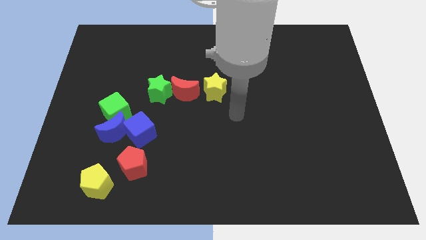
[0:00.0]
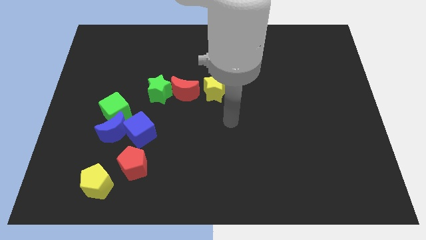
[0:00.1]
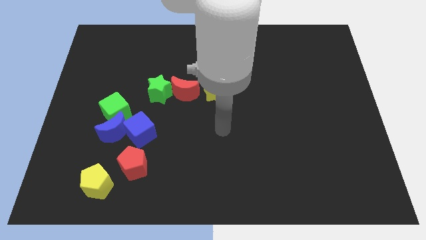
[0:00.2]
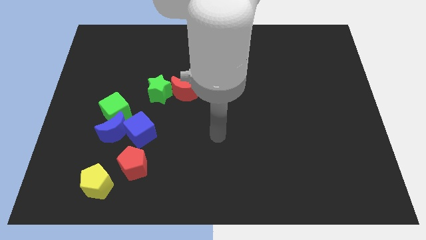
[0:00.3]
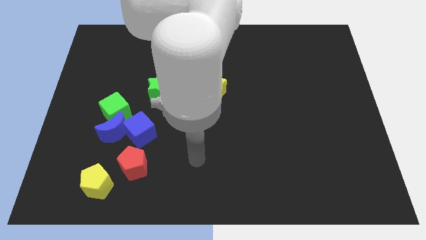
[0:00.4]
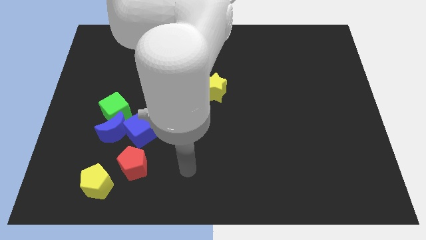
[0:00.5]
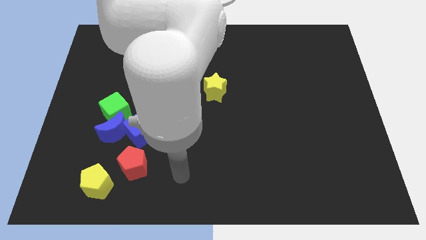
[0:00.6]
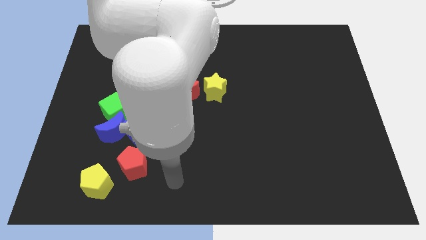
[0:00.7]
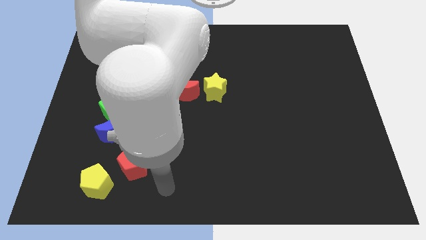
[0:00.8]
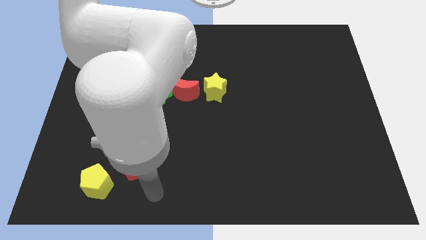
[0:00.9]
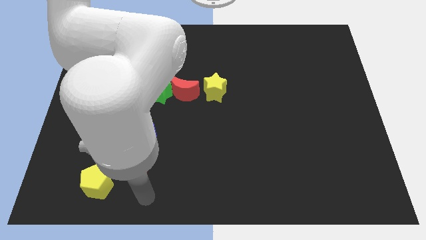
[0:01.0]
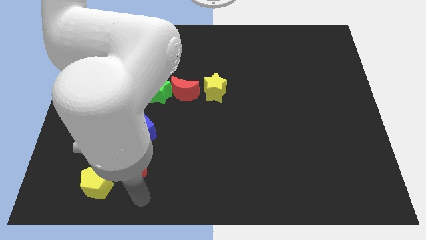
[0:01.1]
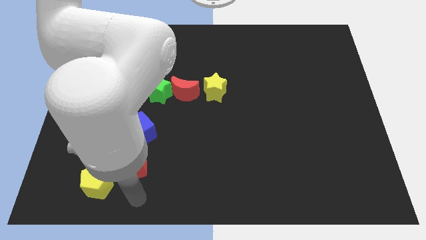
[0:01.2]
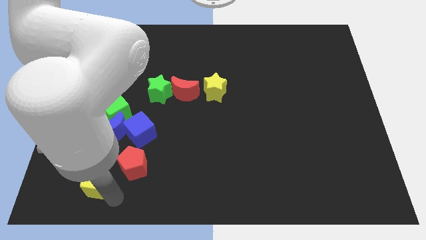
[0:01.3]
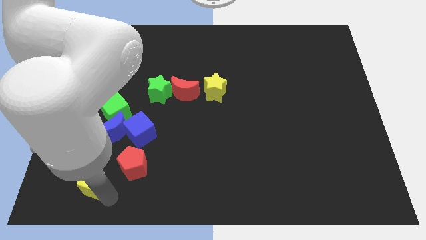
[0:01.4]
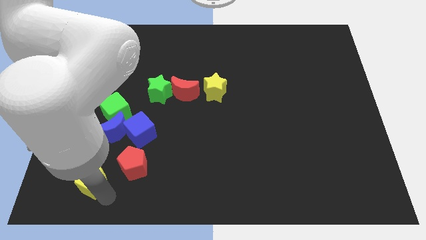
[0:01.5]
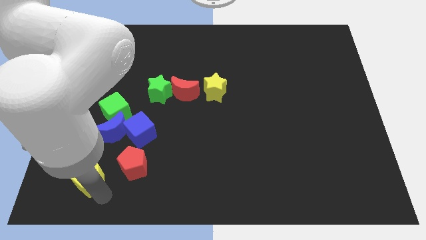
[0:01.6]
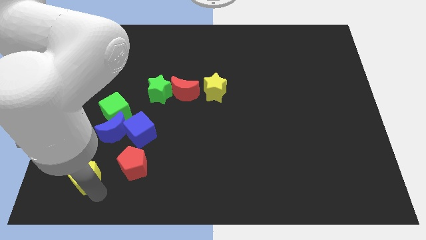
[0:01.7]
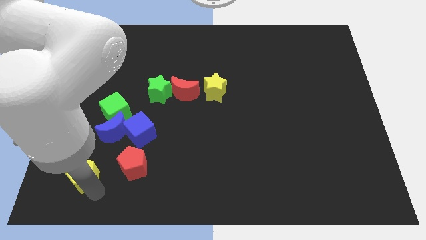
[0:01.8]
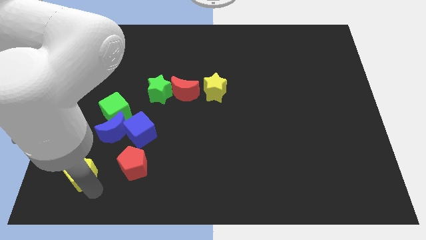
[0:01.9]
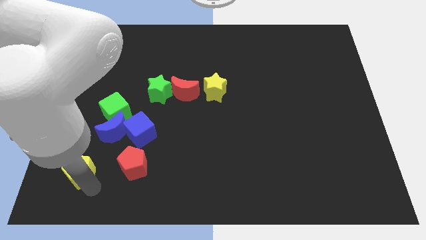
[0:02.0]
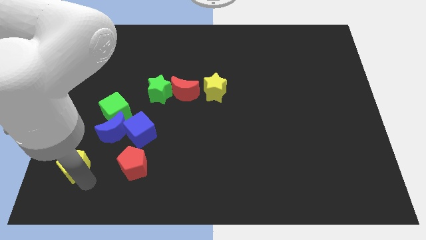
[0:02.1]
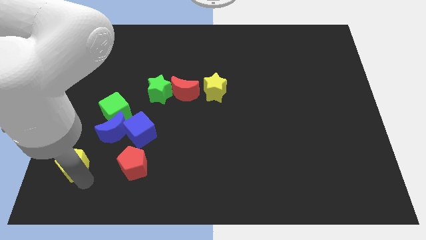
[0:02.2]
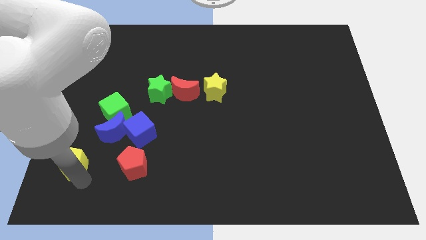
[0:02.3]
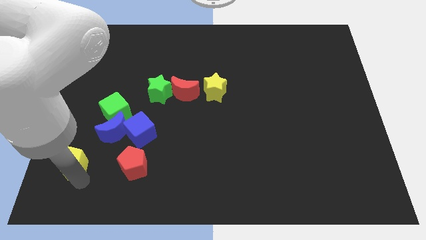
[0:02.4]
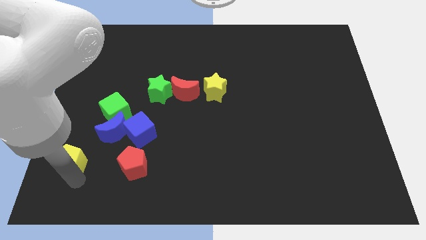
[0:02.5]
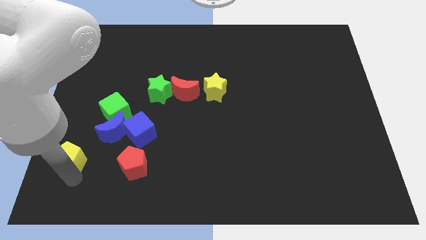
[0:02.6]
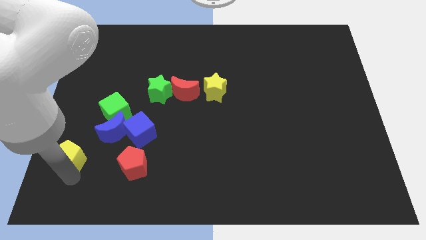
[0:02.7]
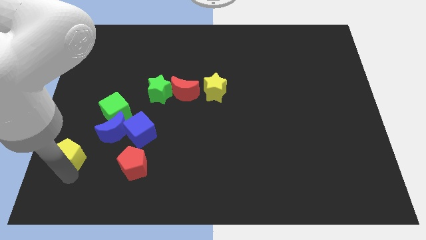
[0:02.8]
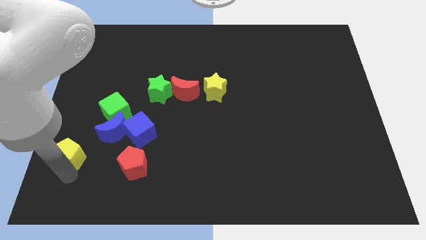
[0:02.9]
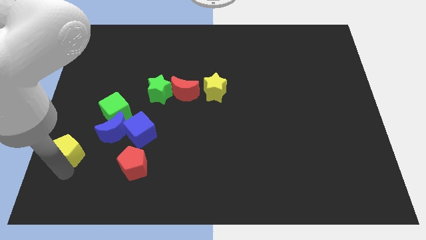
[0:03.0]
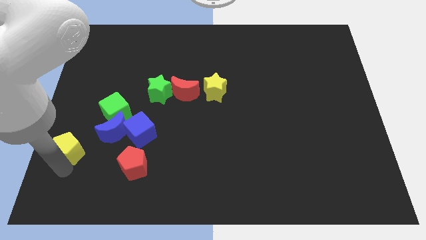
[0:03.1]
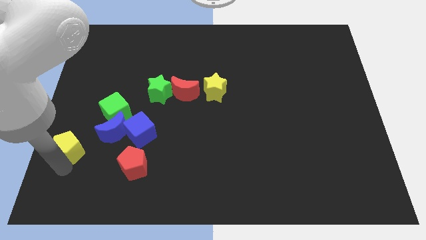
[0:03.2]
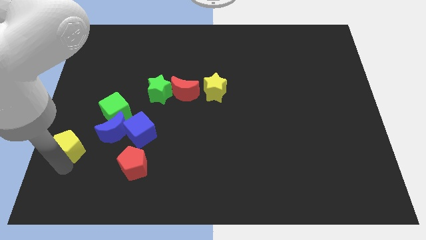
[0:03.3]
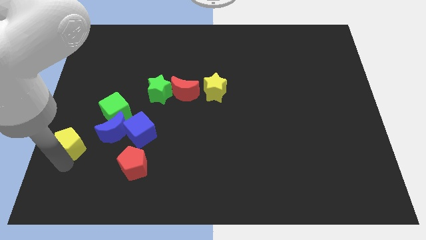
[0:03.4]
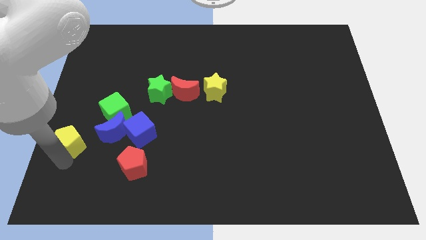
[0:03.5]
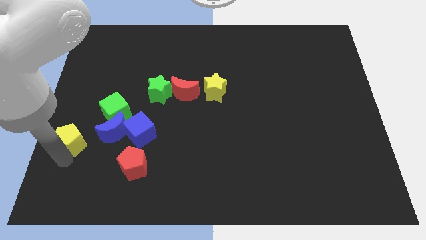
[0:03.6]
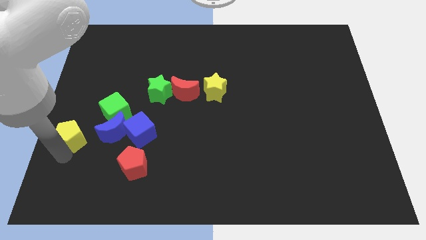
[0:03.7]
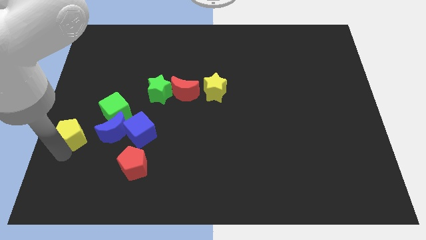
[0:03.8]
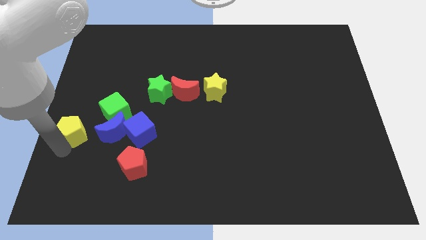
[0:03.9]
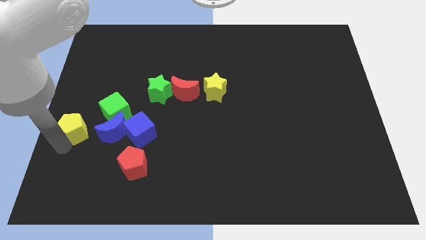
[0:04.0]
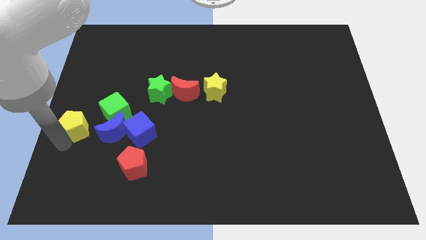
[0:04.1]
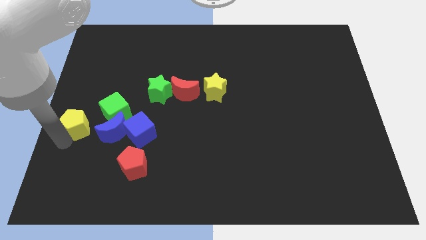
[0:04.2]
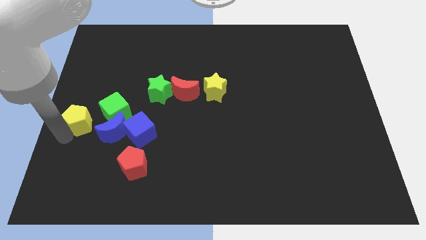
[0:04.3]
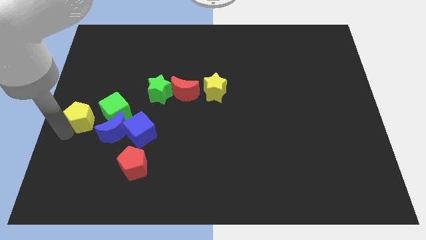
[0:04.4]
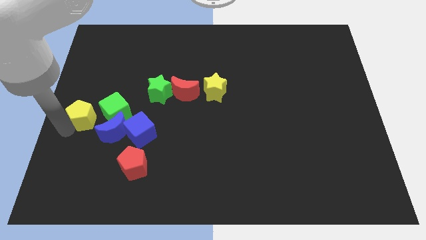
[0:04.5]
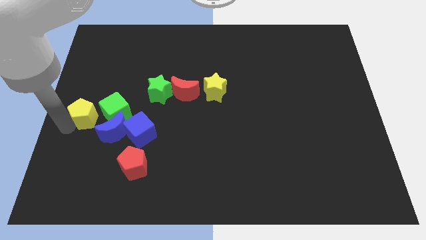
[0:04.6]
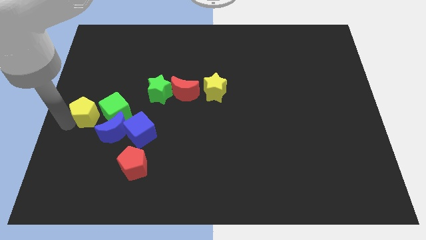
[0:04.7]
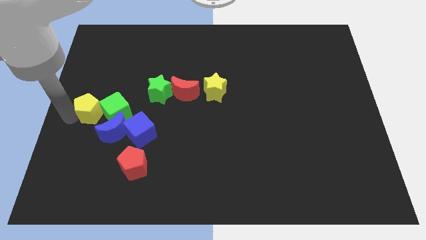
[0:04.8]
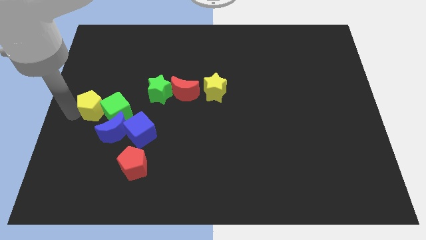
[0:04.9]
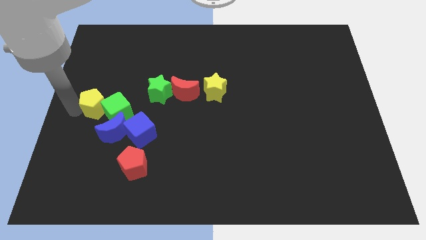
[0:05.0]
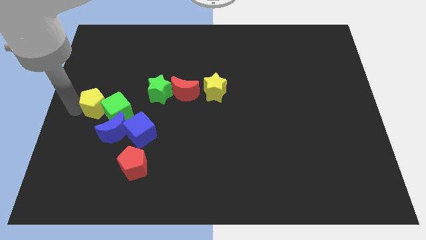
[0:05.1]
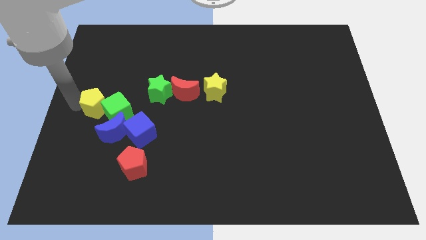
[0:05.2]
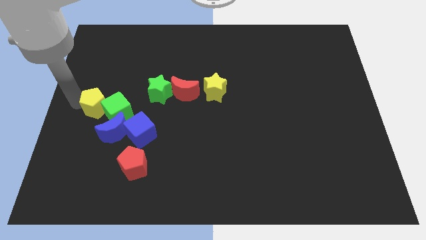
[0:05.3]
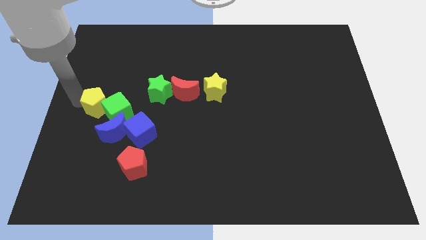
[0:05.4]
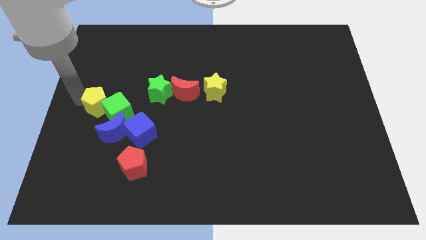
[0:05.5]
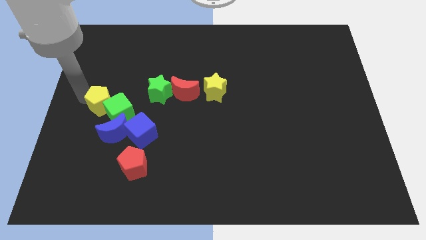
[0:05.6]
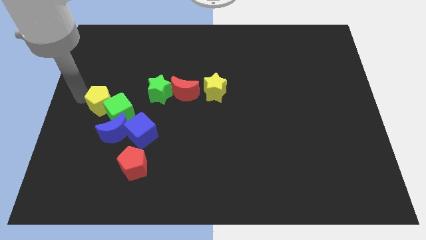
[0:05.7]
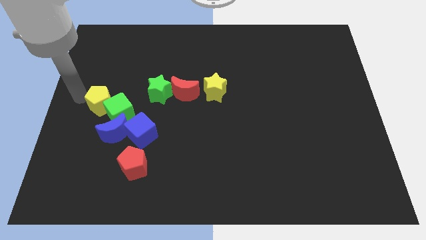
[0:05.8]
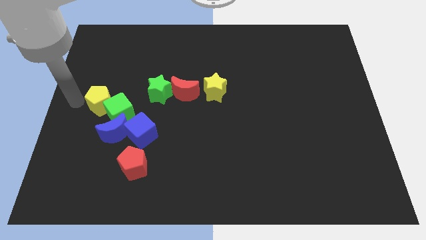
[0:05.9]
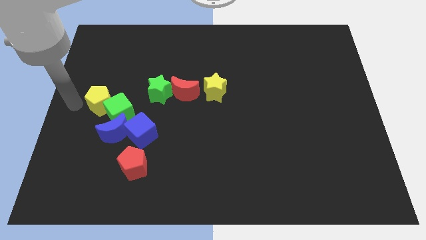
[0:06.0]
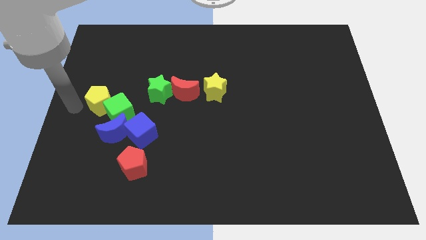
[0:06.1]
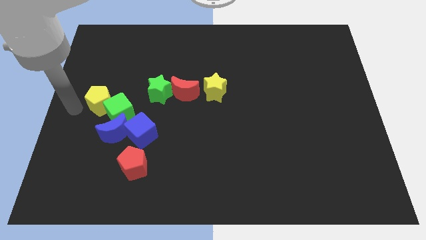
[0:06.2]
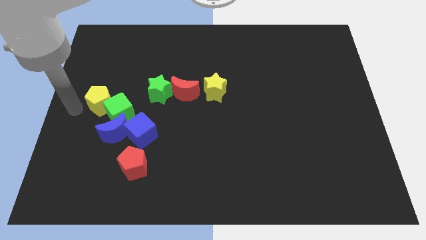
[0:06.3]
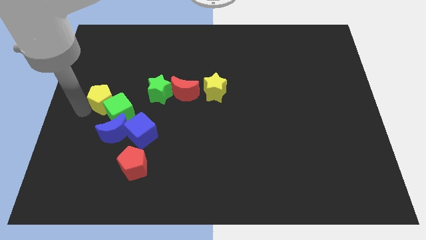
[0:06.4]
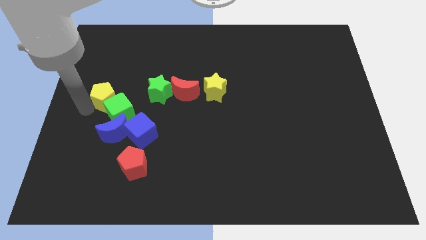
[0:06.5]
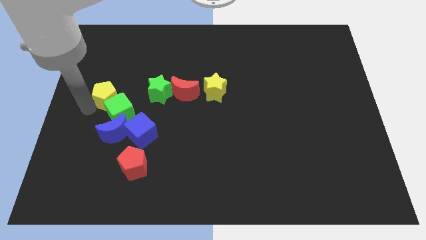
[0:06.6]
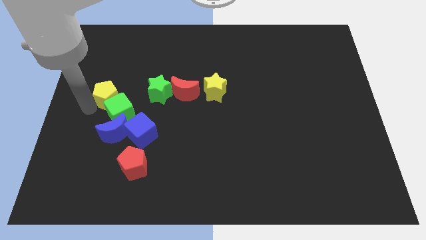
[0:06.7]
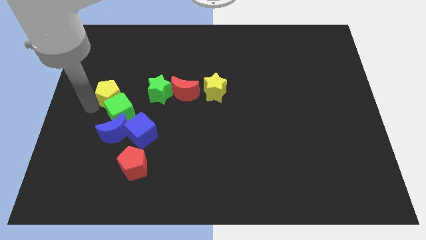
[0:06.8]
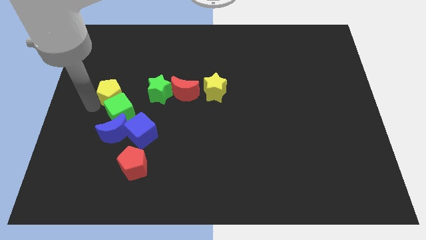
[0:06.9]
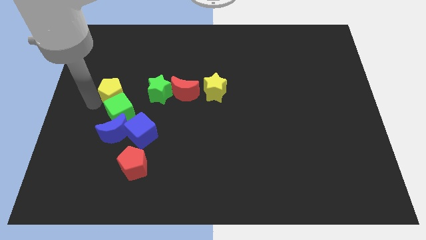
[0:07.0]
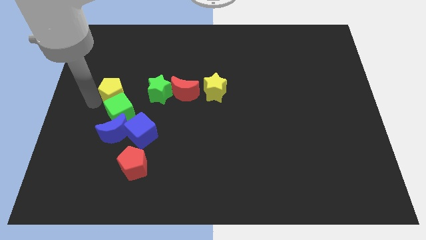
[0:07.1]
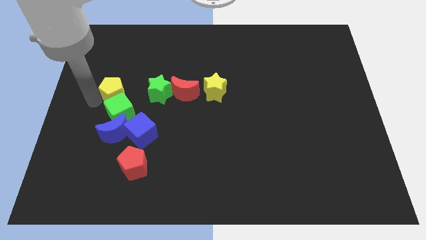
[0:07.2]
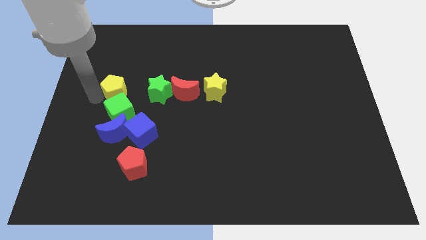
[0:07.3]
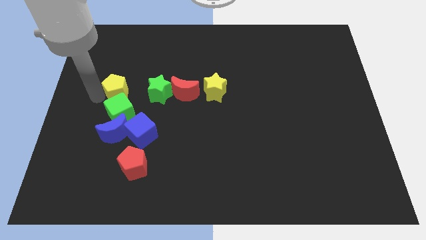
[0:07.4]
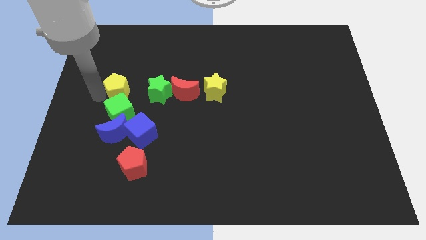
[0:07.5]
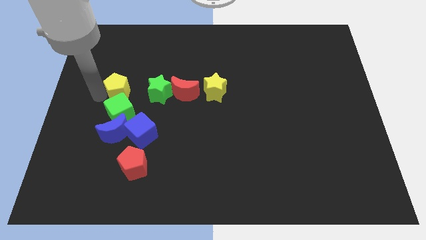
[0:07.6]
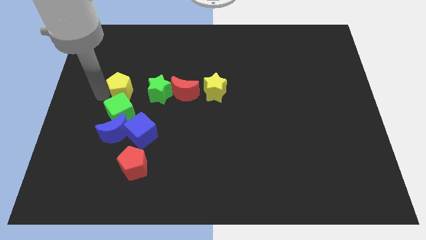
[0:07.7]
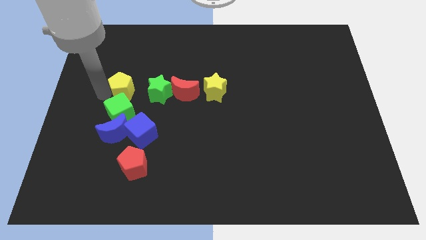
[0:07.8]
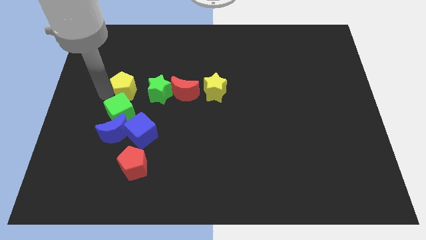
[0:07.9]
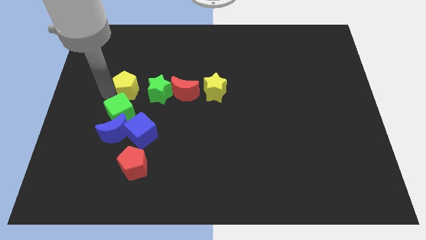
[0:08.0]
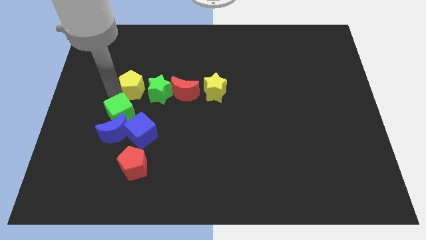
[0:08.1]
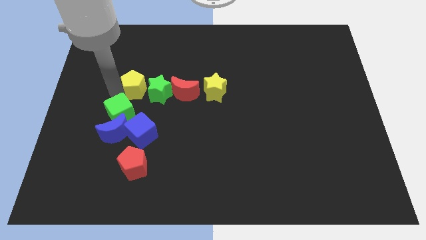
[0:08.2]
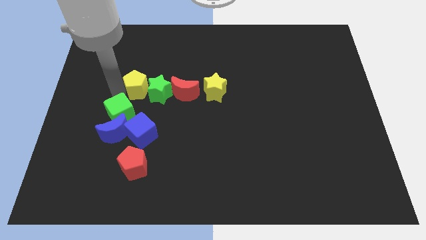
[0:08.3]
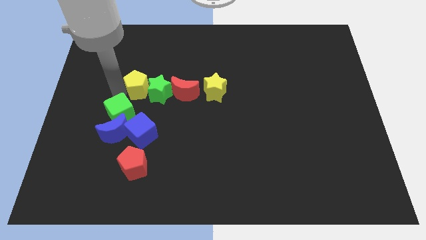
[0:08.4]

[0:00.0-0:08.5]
move the yellow pentagon to the green star

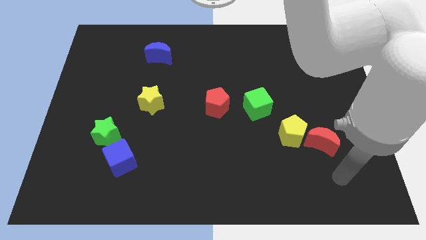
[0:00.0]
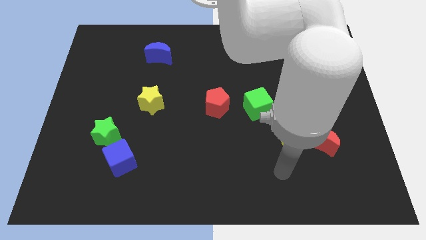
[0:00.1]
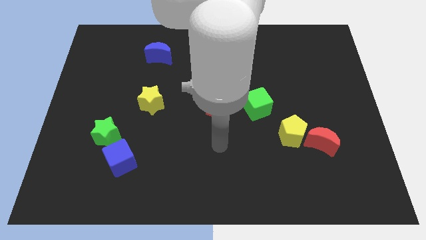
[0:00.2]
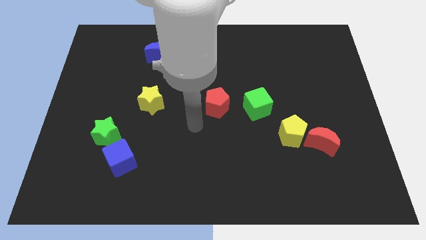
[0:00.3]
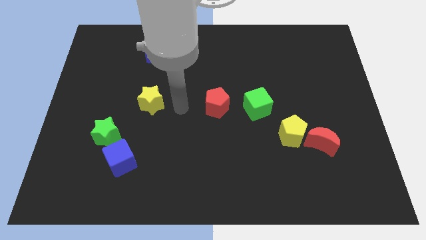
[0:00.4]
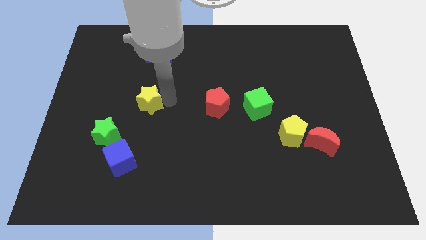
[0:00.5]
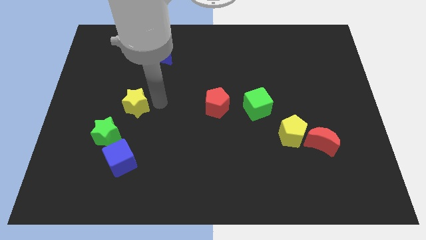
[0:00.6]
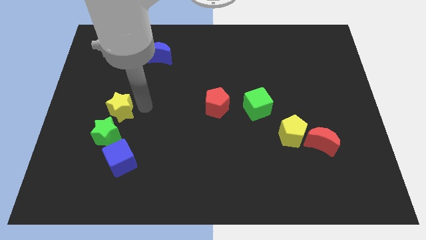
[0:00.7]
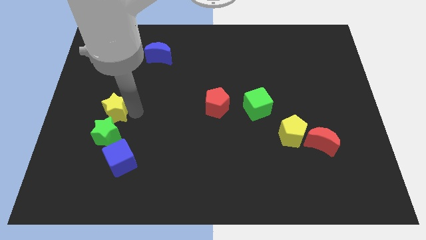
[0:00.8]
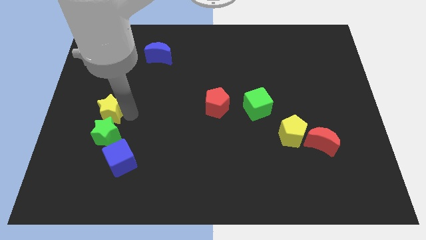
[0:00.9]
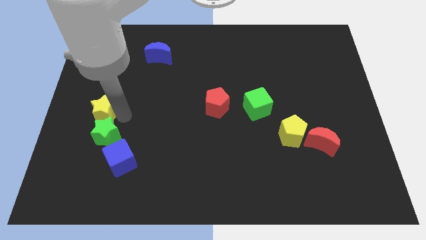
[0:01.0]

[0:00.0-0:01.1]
slide the yellow star to the green star
